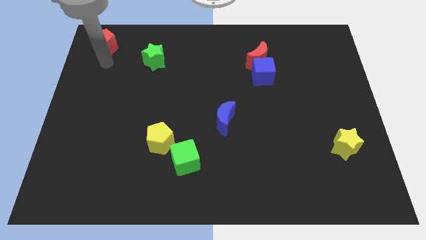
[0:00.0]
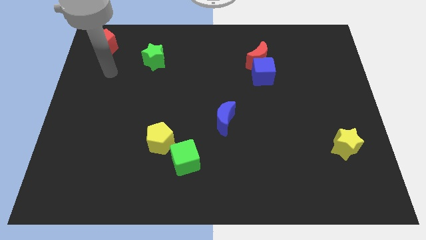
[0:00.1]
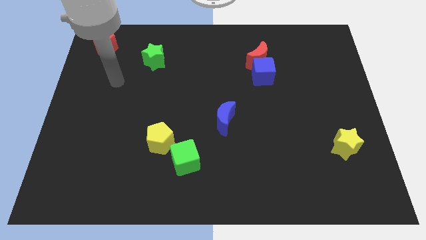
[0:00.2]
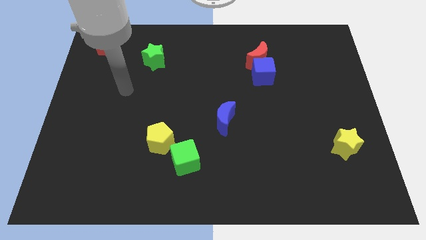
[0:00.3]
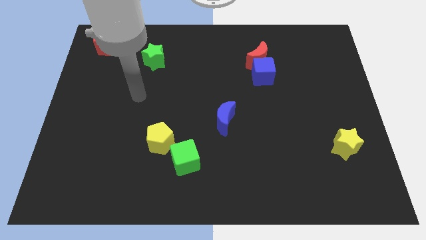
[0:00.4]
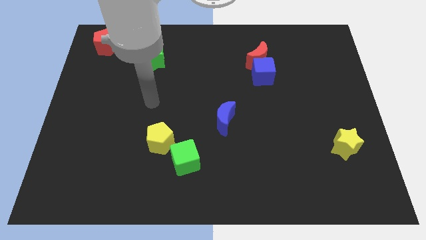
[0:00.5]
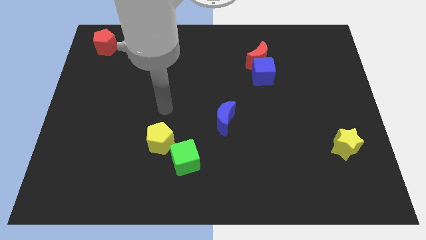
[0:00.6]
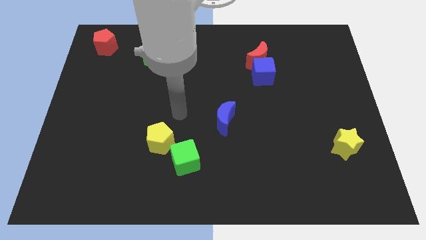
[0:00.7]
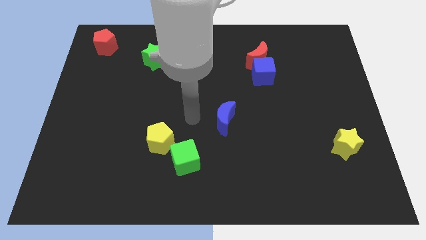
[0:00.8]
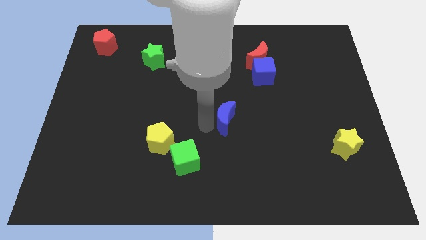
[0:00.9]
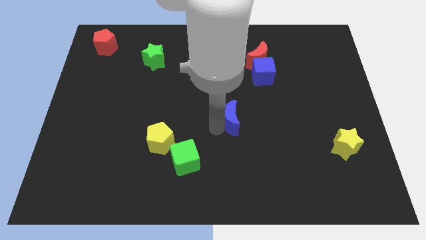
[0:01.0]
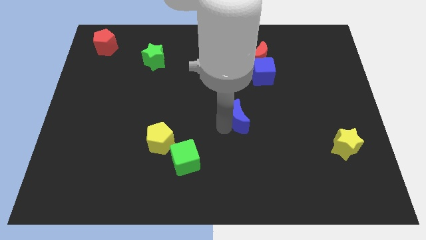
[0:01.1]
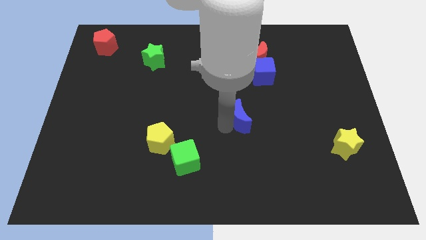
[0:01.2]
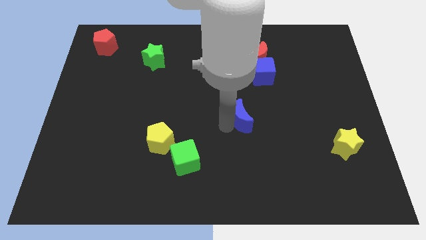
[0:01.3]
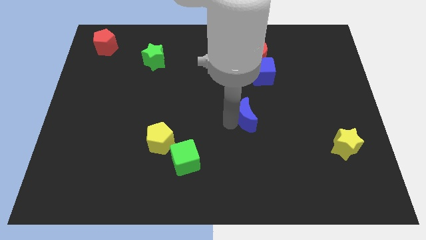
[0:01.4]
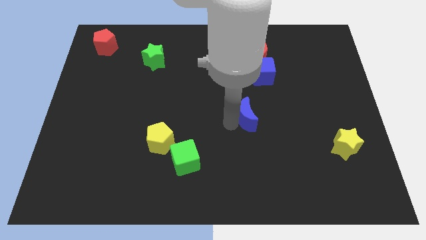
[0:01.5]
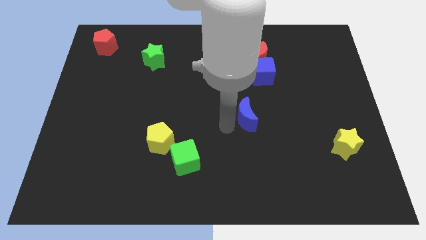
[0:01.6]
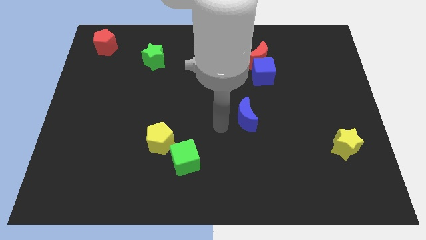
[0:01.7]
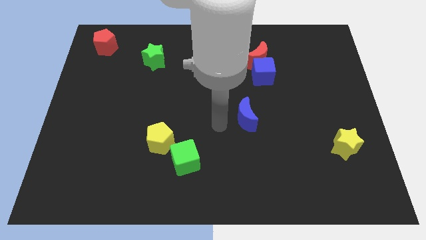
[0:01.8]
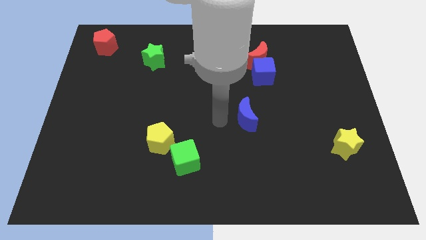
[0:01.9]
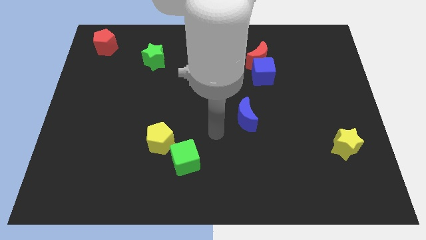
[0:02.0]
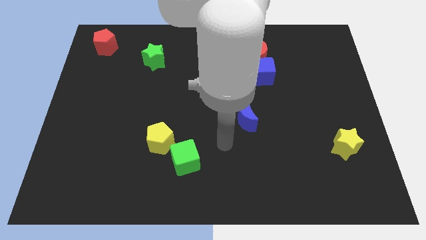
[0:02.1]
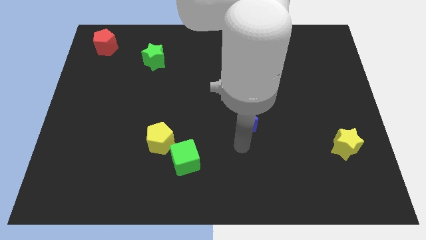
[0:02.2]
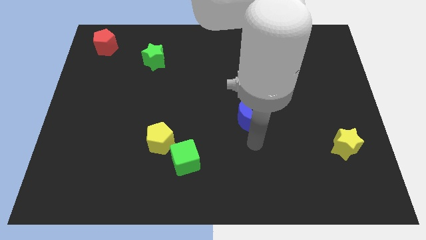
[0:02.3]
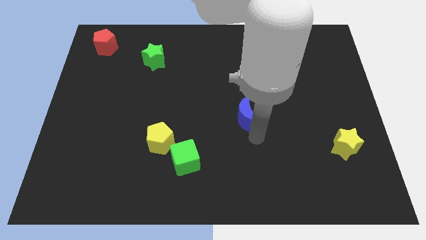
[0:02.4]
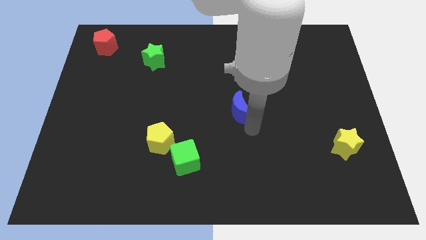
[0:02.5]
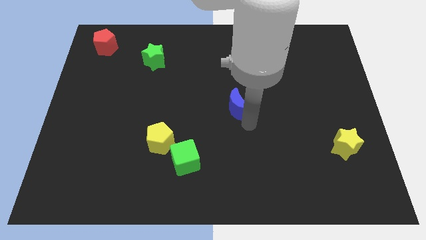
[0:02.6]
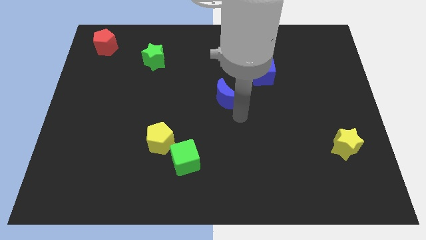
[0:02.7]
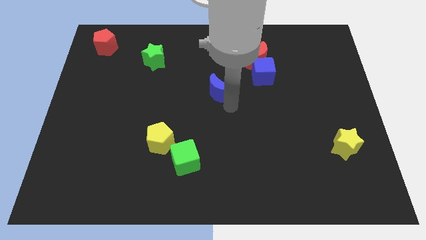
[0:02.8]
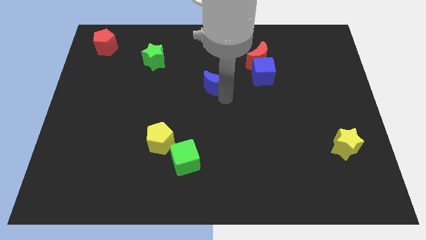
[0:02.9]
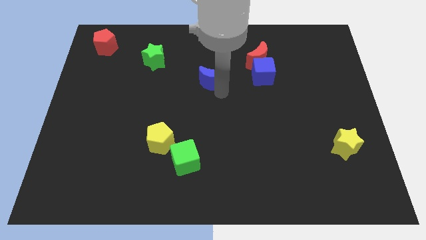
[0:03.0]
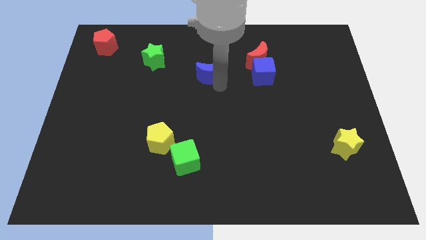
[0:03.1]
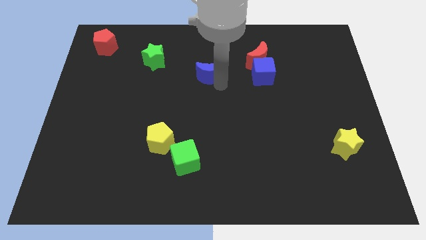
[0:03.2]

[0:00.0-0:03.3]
push the blue crescent to the left of the blue cube

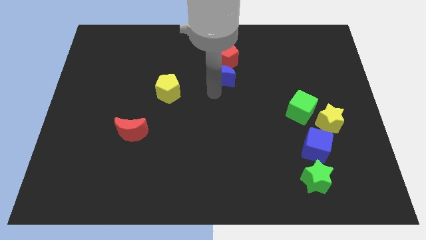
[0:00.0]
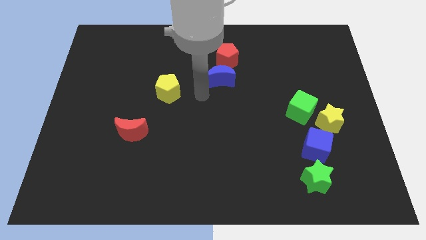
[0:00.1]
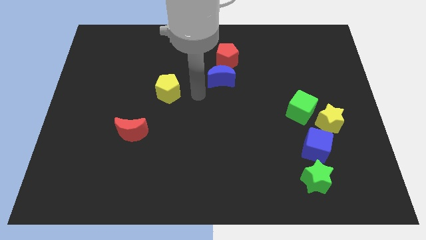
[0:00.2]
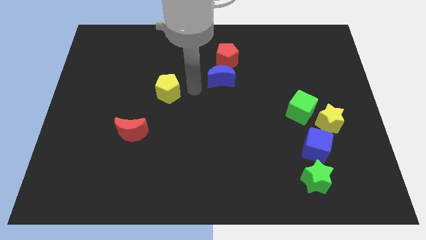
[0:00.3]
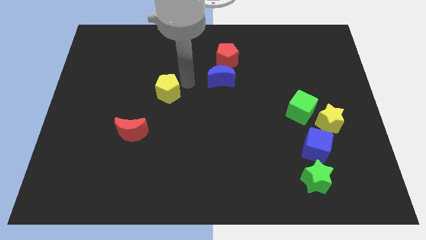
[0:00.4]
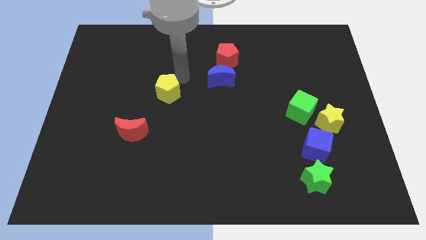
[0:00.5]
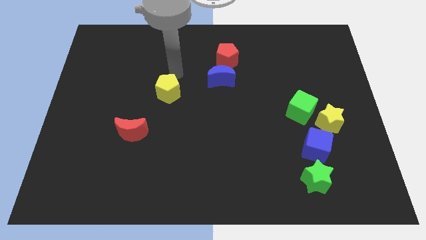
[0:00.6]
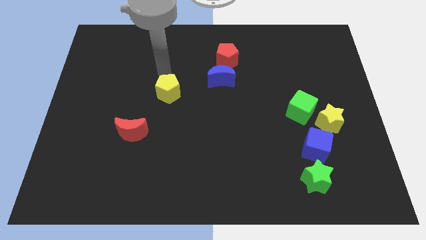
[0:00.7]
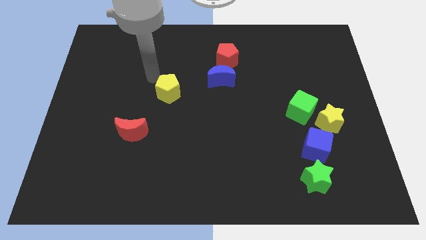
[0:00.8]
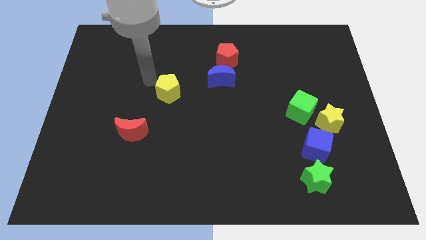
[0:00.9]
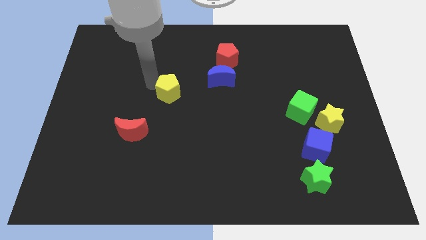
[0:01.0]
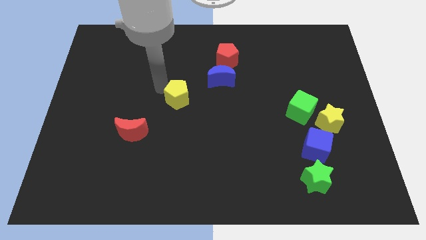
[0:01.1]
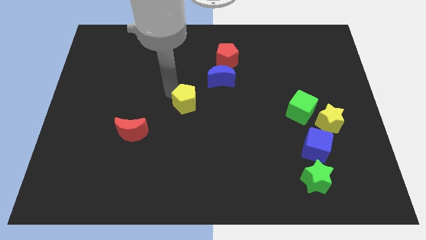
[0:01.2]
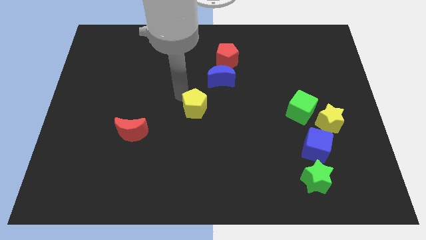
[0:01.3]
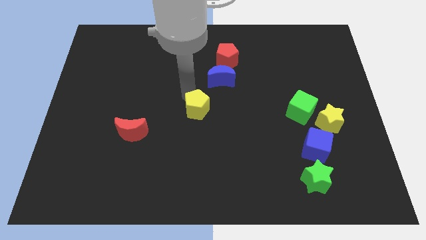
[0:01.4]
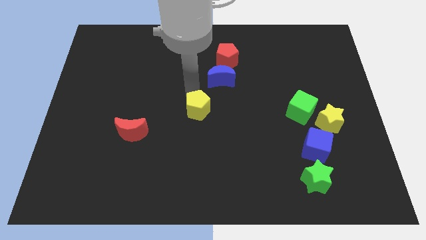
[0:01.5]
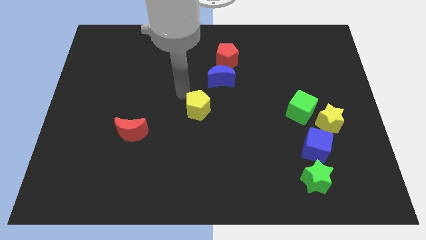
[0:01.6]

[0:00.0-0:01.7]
move the yellow pentagon towards the center of the board

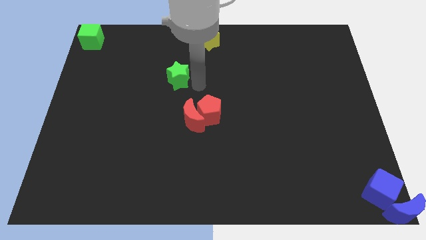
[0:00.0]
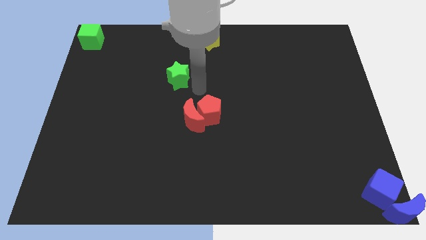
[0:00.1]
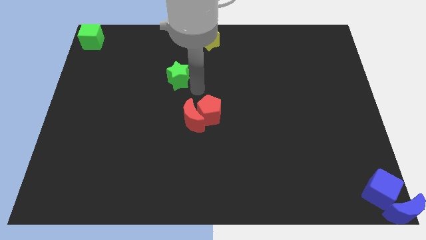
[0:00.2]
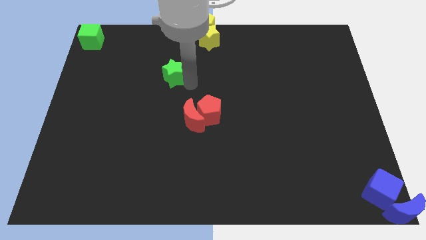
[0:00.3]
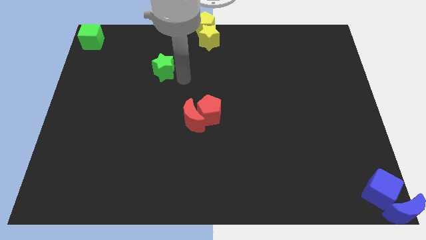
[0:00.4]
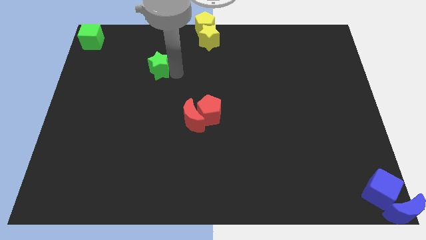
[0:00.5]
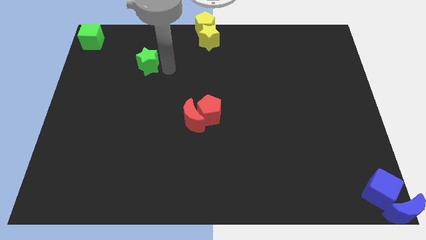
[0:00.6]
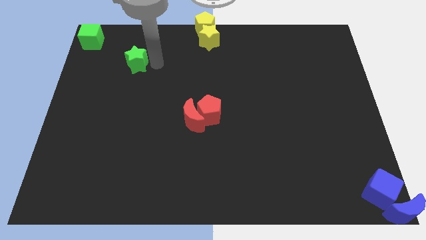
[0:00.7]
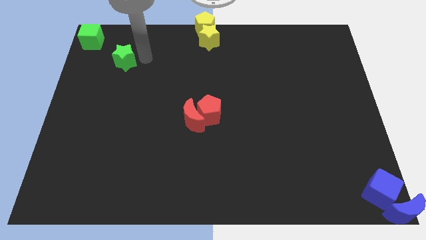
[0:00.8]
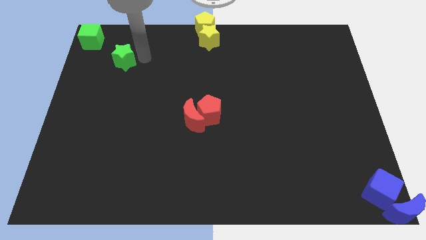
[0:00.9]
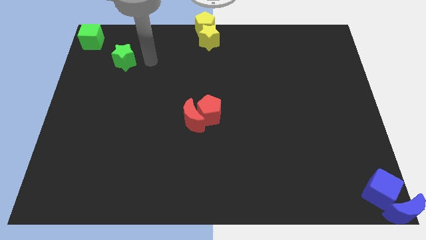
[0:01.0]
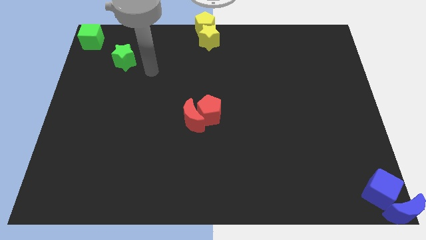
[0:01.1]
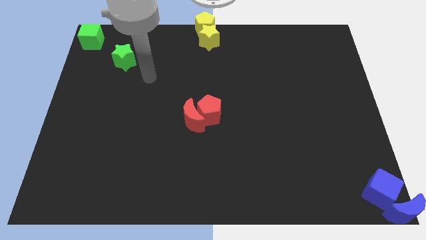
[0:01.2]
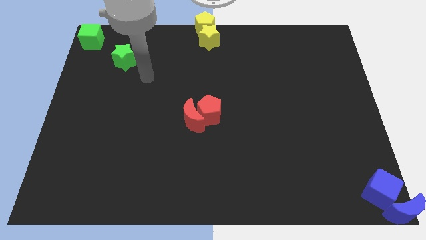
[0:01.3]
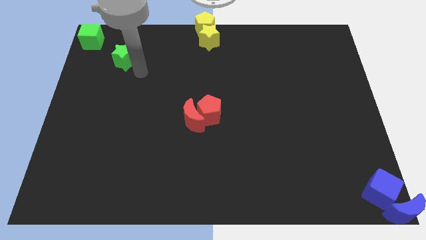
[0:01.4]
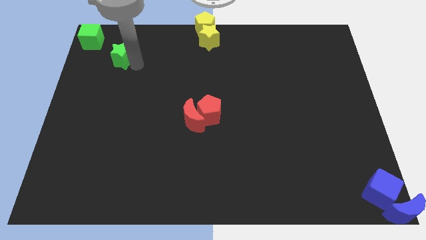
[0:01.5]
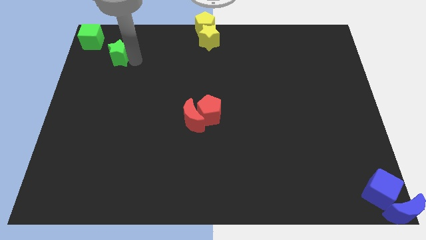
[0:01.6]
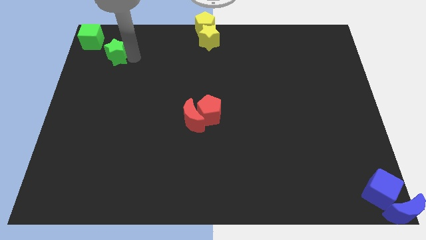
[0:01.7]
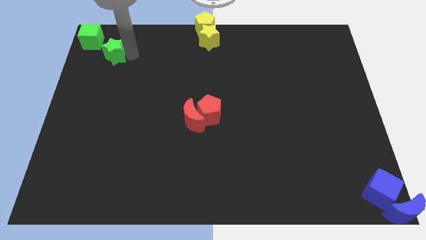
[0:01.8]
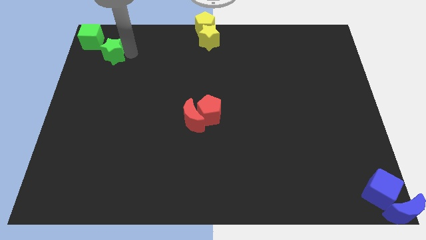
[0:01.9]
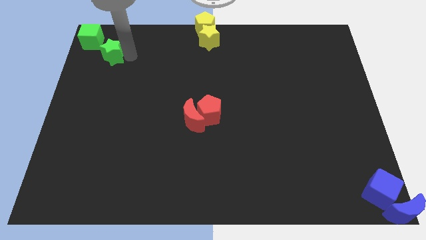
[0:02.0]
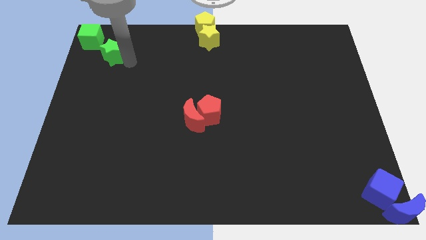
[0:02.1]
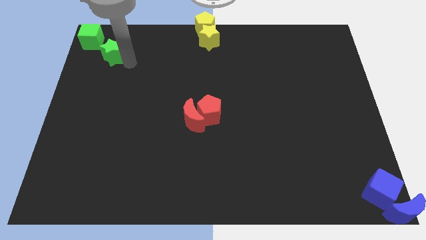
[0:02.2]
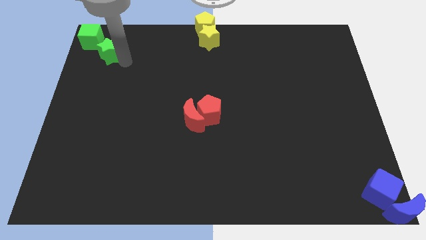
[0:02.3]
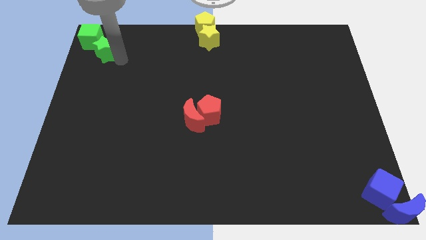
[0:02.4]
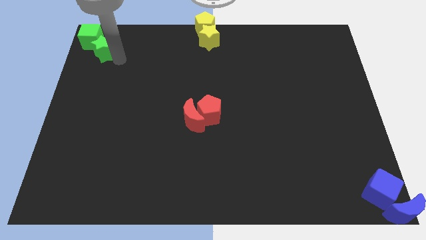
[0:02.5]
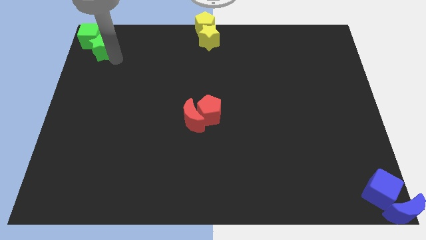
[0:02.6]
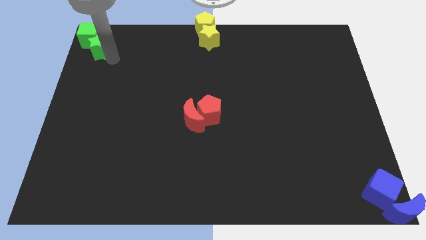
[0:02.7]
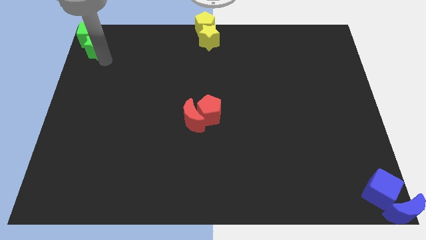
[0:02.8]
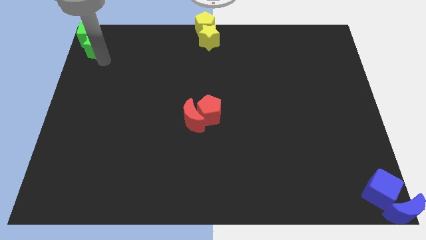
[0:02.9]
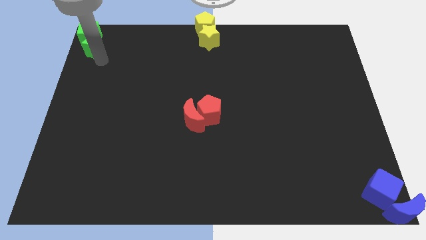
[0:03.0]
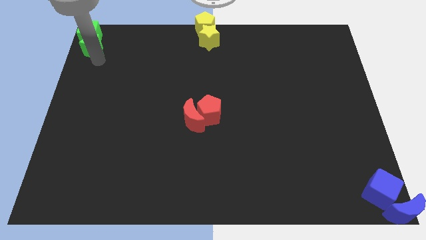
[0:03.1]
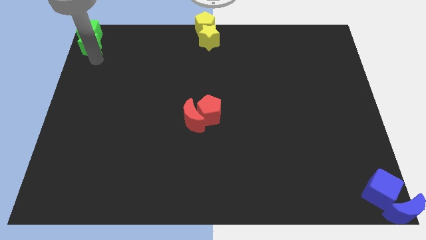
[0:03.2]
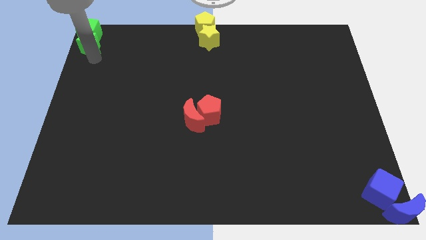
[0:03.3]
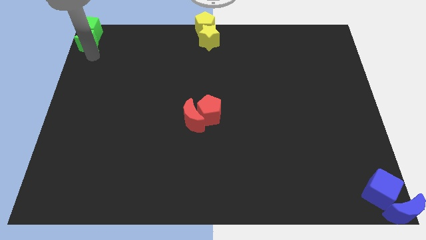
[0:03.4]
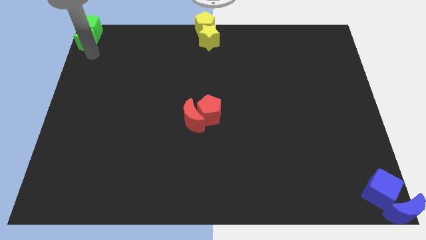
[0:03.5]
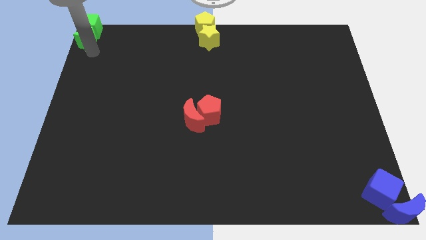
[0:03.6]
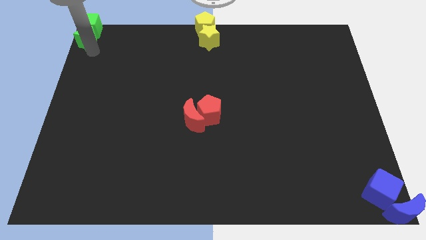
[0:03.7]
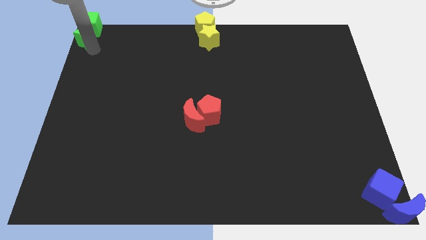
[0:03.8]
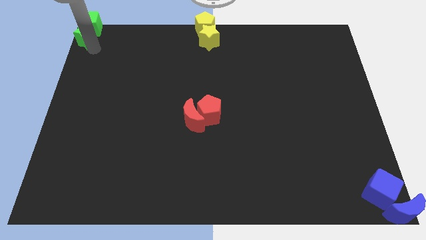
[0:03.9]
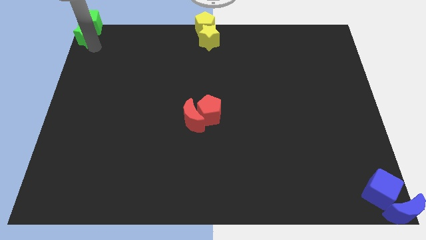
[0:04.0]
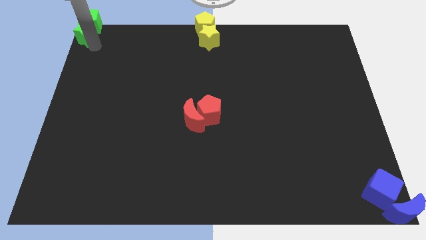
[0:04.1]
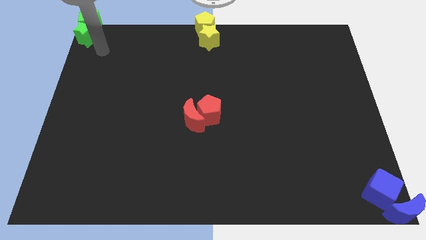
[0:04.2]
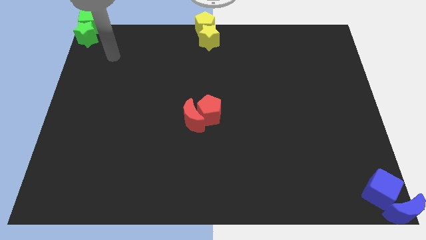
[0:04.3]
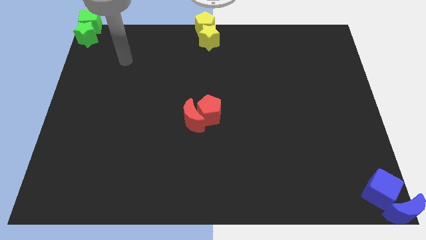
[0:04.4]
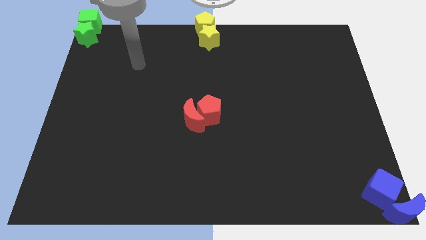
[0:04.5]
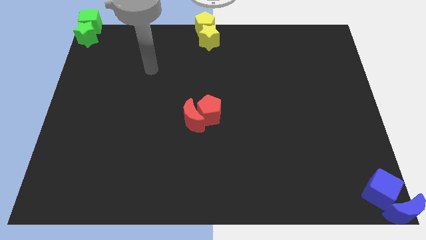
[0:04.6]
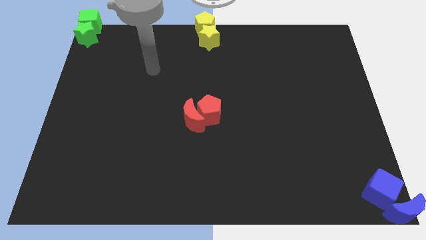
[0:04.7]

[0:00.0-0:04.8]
push the green star into the green cube
